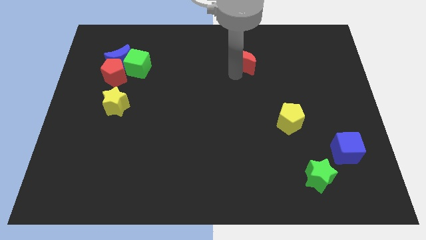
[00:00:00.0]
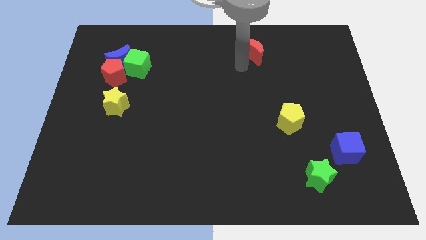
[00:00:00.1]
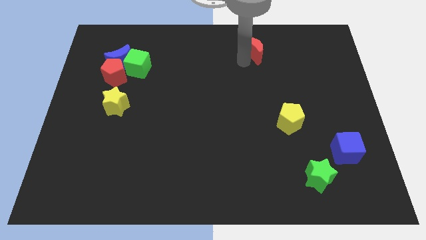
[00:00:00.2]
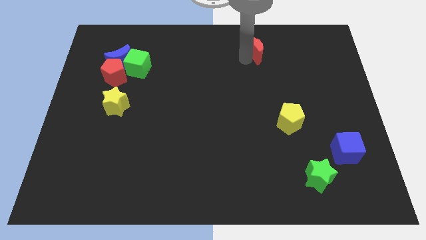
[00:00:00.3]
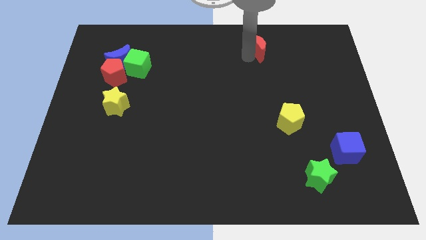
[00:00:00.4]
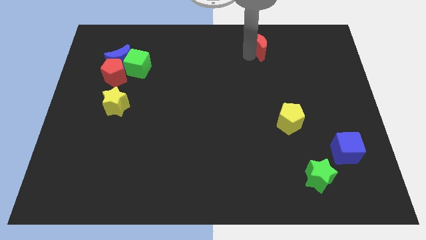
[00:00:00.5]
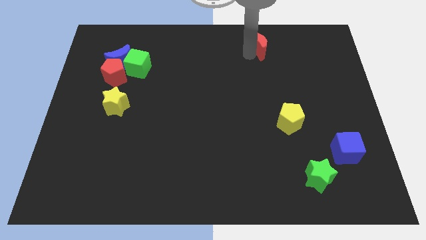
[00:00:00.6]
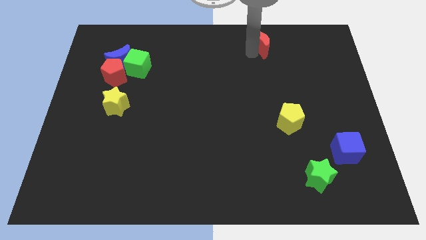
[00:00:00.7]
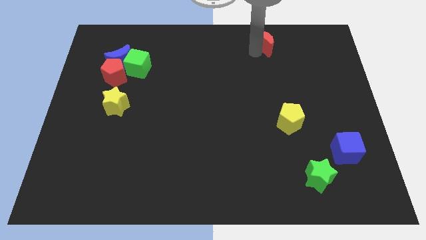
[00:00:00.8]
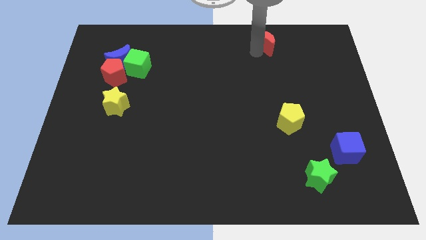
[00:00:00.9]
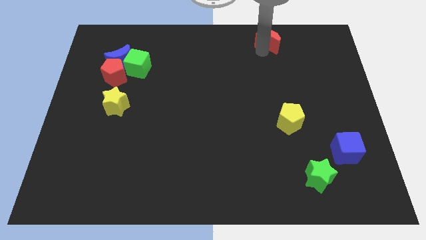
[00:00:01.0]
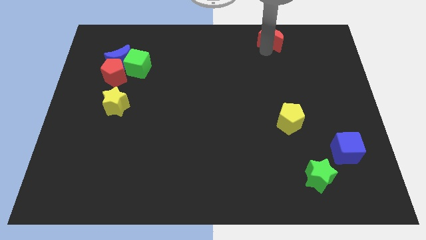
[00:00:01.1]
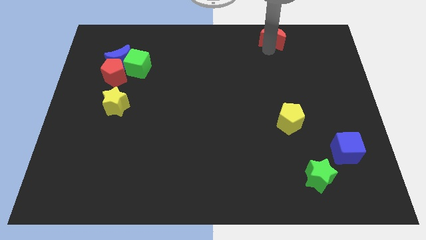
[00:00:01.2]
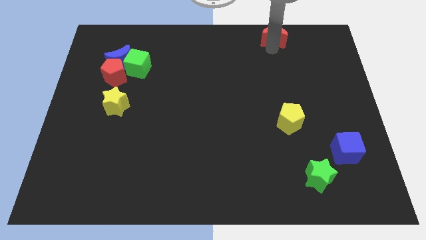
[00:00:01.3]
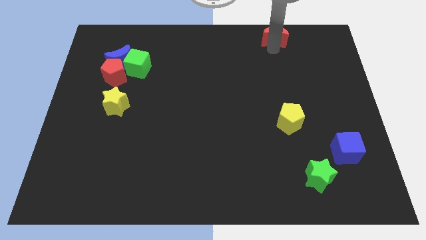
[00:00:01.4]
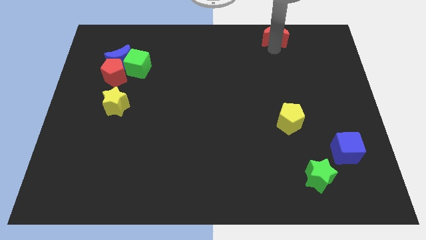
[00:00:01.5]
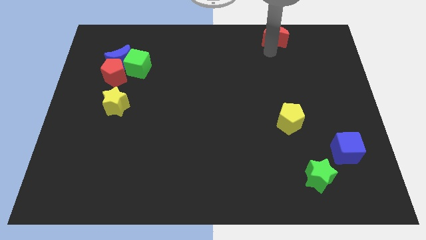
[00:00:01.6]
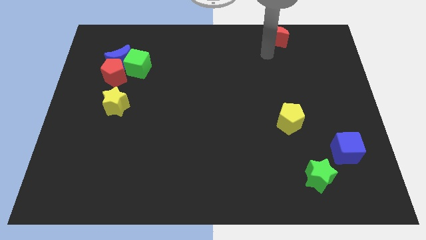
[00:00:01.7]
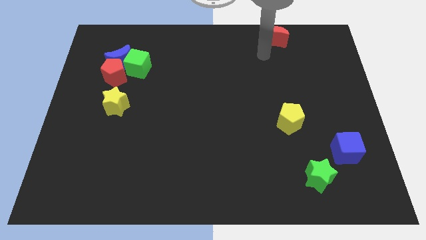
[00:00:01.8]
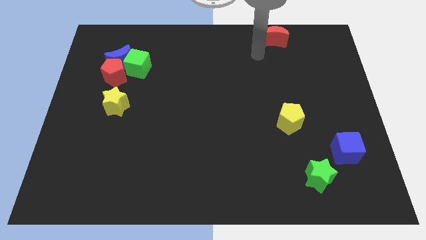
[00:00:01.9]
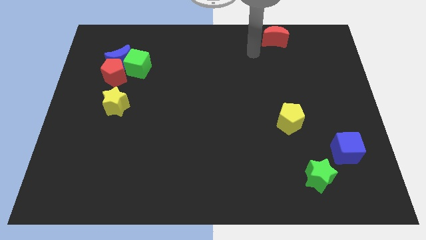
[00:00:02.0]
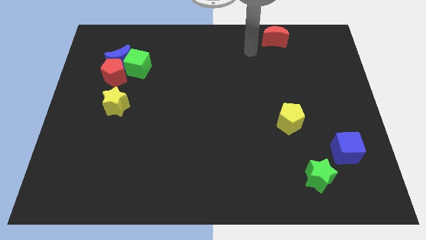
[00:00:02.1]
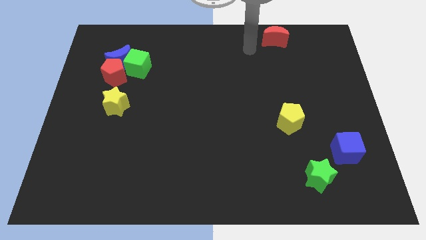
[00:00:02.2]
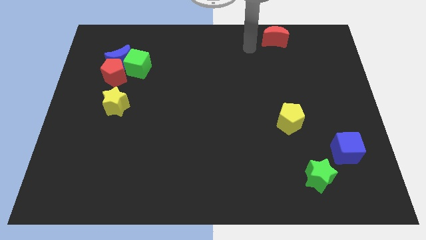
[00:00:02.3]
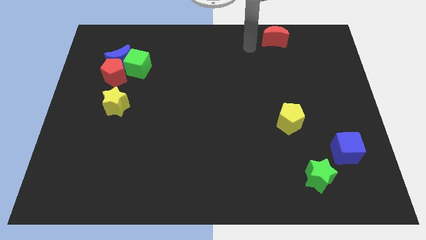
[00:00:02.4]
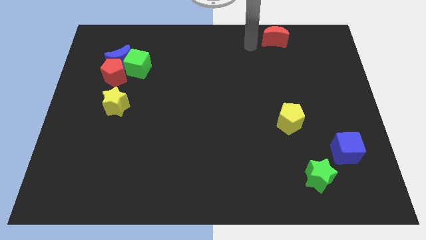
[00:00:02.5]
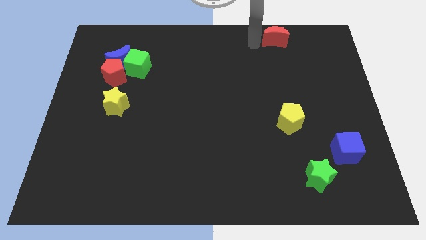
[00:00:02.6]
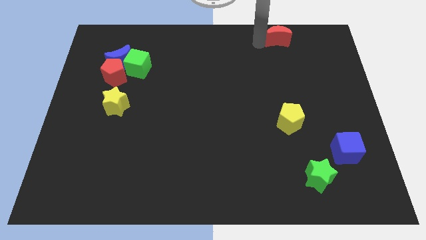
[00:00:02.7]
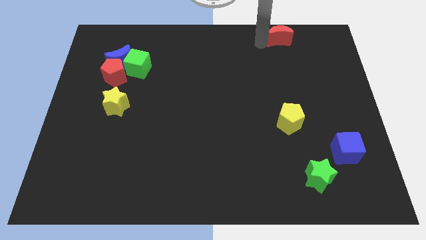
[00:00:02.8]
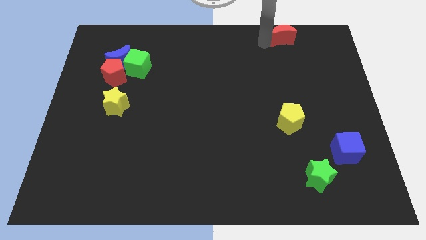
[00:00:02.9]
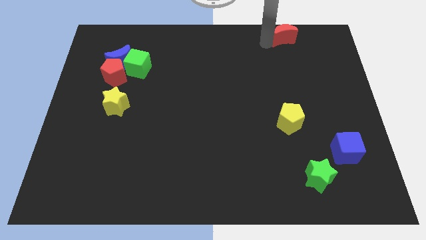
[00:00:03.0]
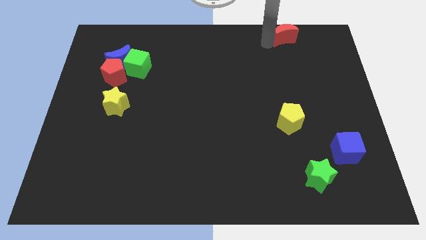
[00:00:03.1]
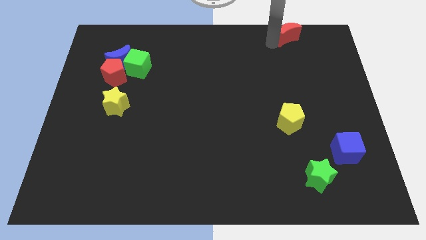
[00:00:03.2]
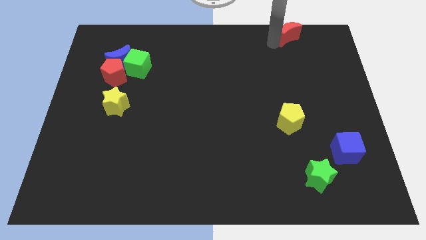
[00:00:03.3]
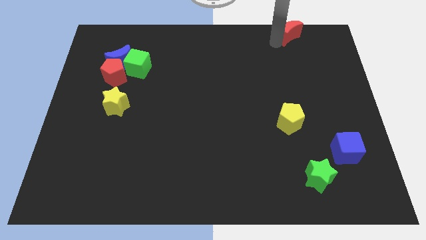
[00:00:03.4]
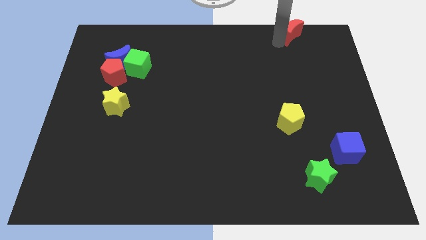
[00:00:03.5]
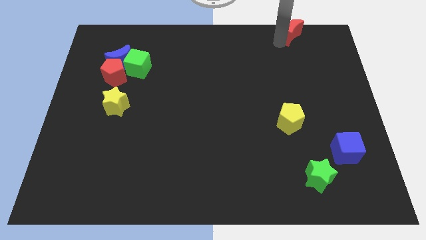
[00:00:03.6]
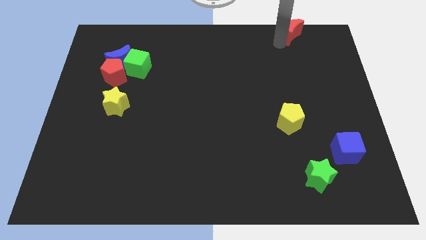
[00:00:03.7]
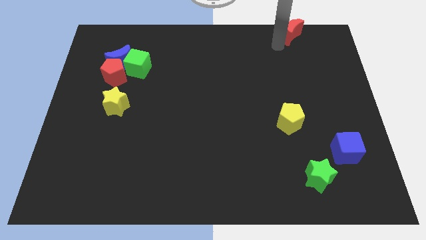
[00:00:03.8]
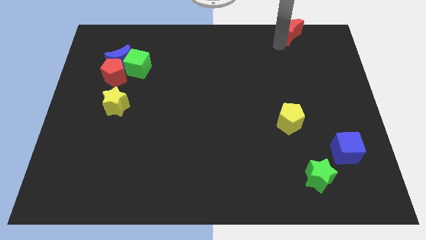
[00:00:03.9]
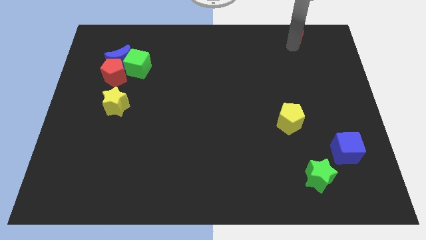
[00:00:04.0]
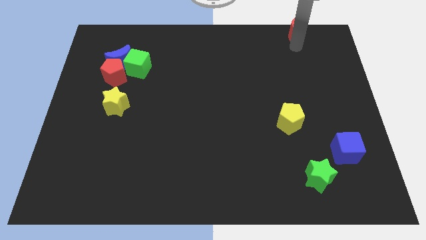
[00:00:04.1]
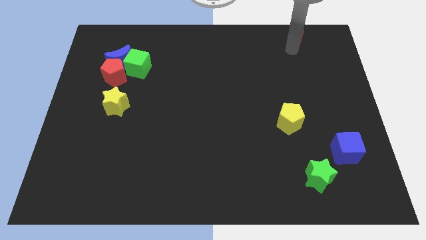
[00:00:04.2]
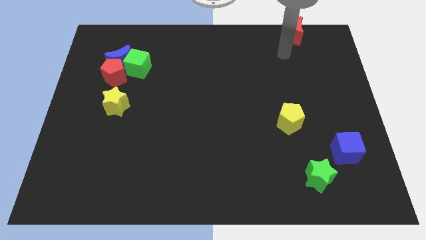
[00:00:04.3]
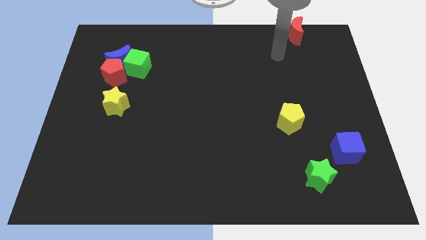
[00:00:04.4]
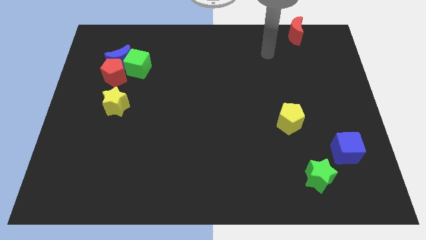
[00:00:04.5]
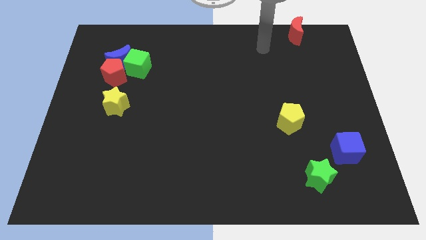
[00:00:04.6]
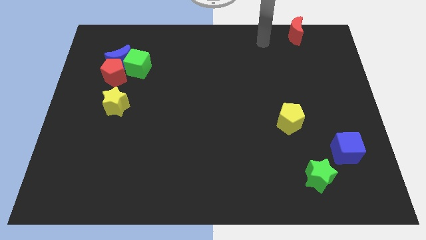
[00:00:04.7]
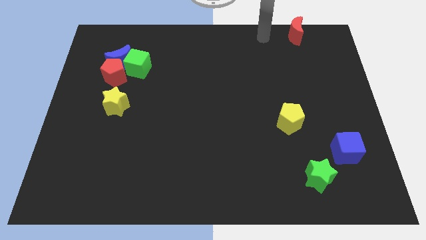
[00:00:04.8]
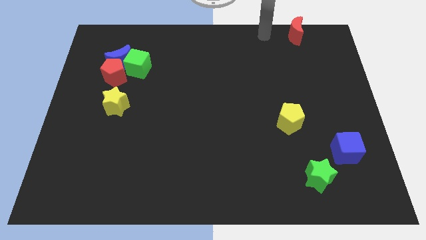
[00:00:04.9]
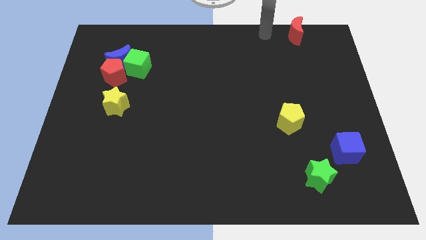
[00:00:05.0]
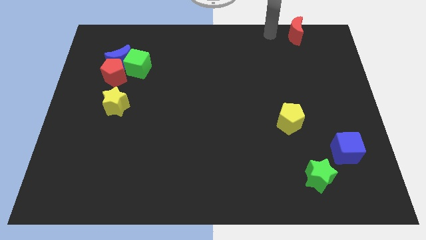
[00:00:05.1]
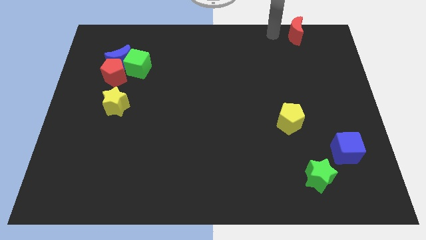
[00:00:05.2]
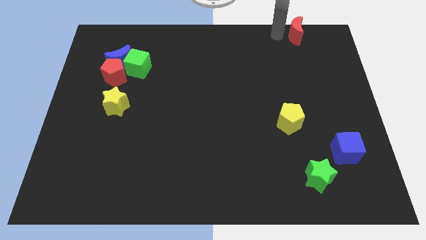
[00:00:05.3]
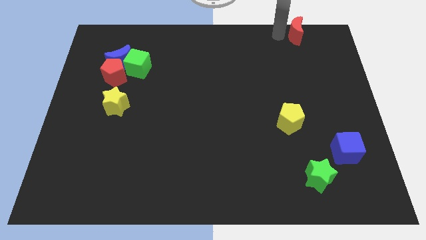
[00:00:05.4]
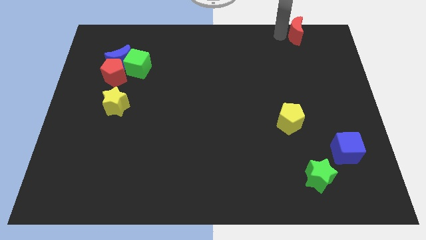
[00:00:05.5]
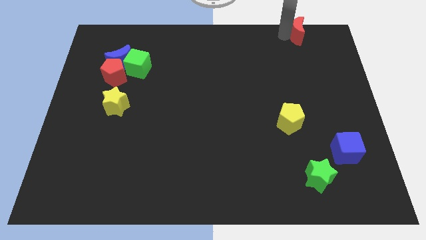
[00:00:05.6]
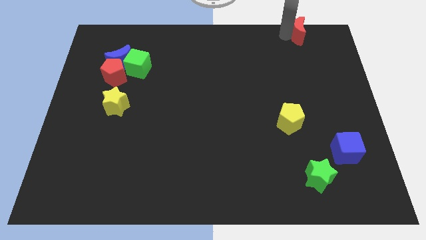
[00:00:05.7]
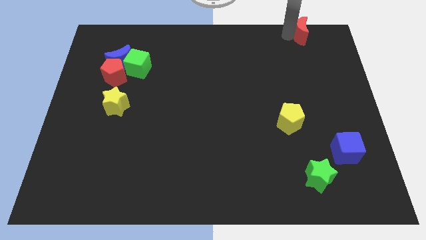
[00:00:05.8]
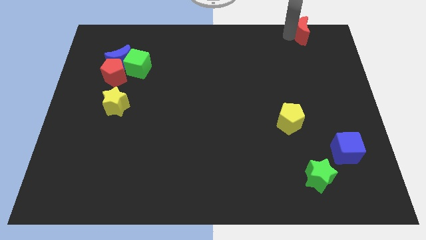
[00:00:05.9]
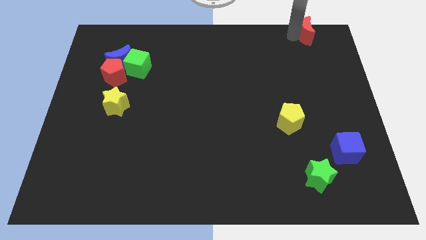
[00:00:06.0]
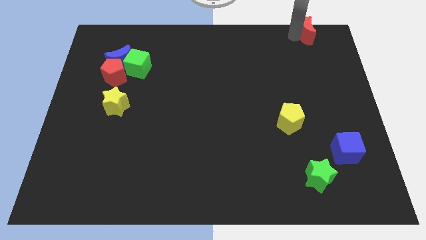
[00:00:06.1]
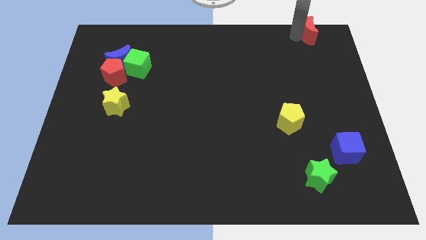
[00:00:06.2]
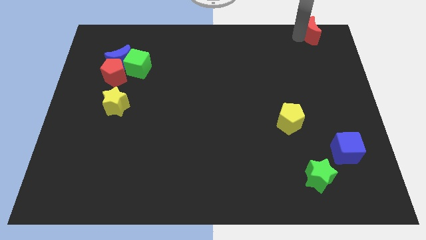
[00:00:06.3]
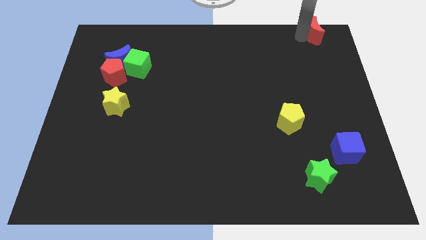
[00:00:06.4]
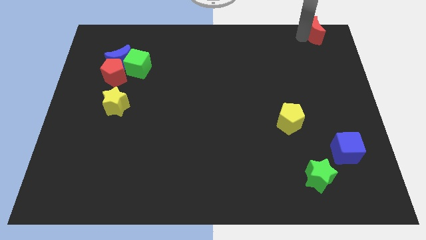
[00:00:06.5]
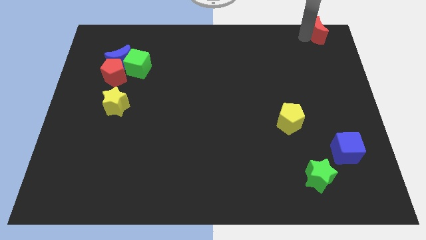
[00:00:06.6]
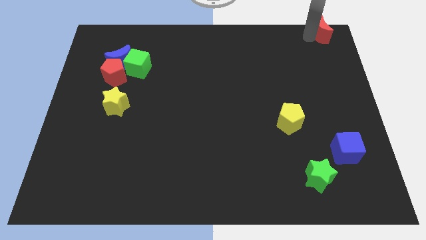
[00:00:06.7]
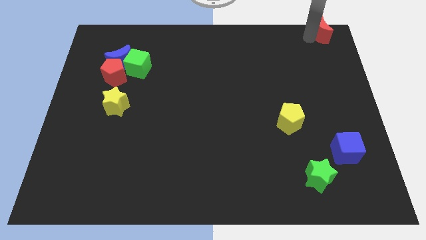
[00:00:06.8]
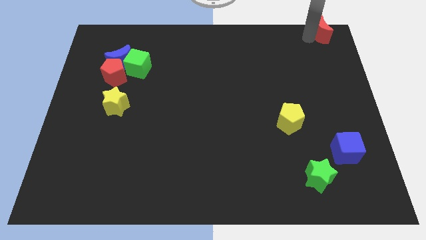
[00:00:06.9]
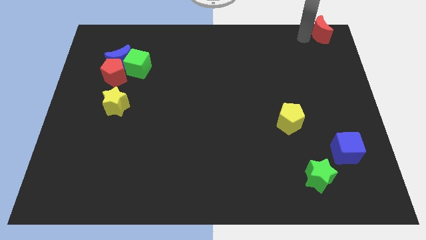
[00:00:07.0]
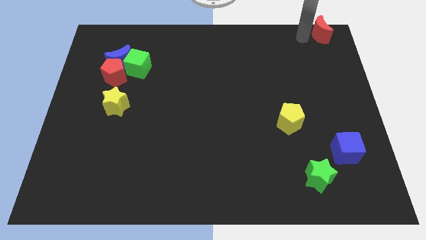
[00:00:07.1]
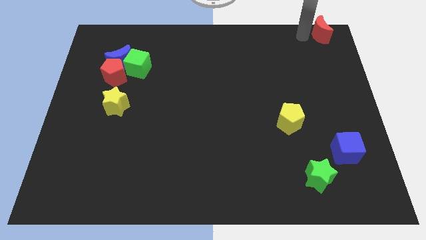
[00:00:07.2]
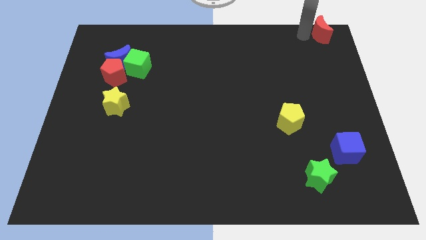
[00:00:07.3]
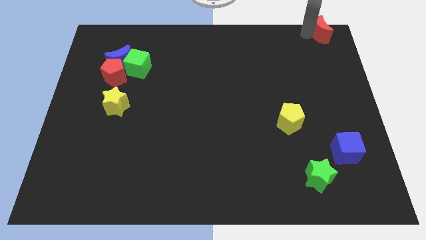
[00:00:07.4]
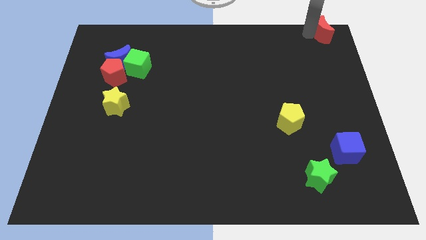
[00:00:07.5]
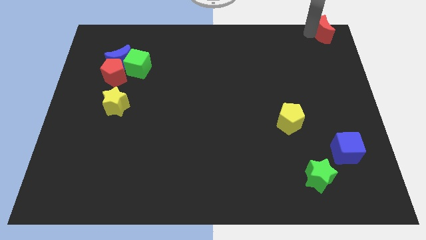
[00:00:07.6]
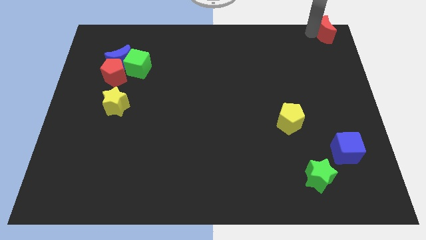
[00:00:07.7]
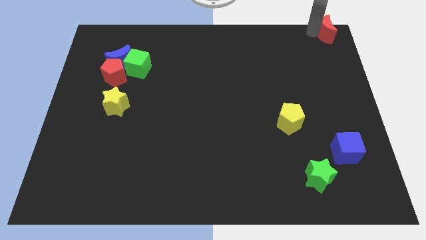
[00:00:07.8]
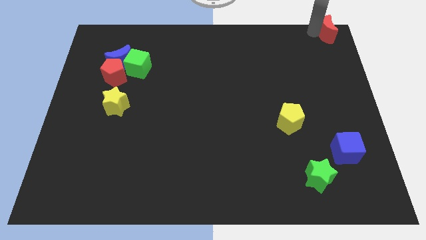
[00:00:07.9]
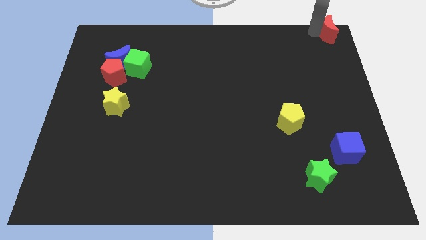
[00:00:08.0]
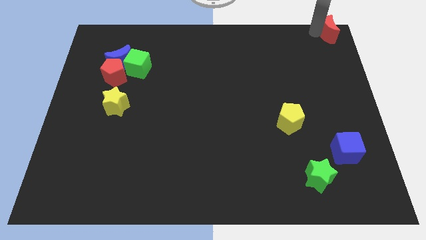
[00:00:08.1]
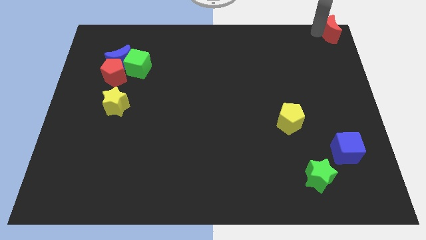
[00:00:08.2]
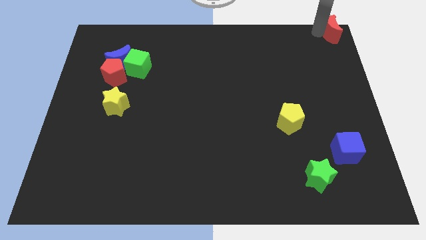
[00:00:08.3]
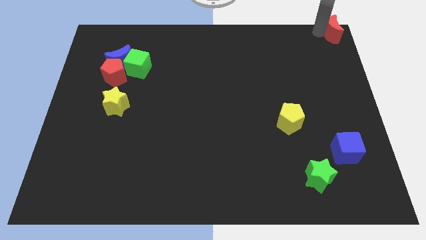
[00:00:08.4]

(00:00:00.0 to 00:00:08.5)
move the red moon to the top right side corner

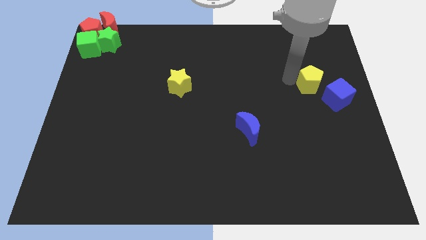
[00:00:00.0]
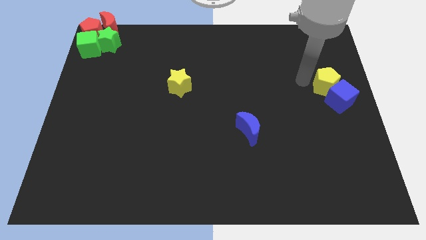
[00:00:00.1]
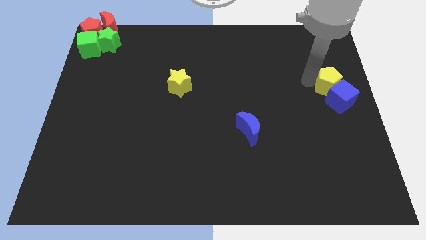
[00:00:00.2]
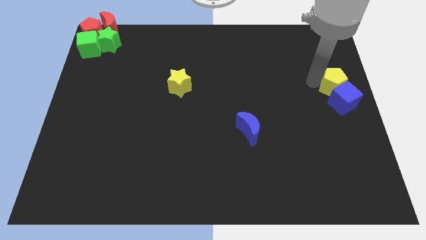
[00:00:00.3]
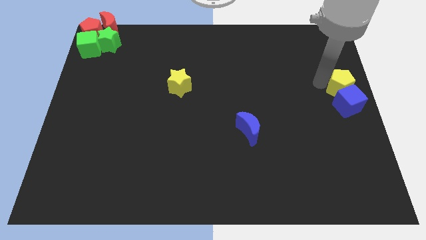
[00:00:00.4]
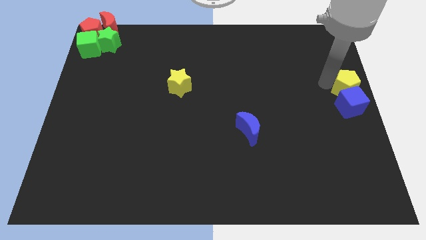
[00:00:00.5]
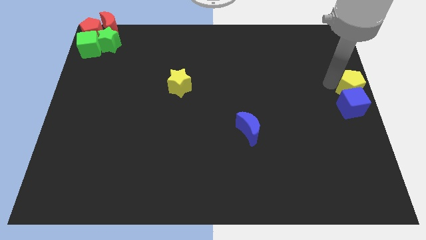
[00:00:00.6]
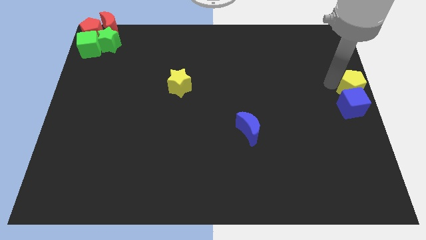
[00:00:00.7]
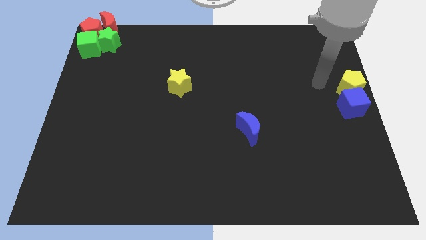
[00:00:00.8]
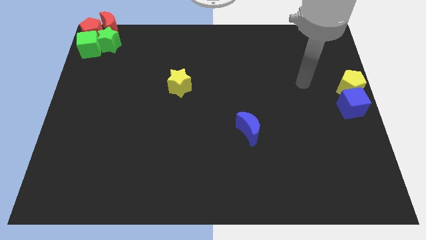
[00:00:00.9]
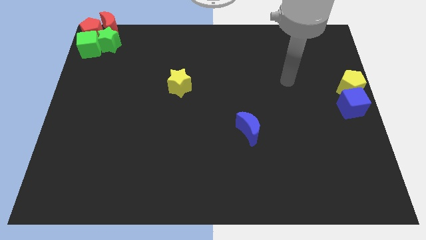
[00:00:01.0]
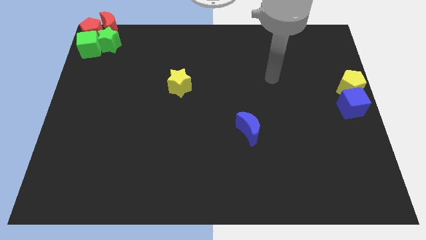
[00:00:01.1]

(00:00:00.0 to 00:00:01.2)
push the yellow pentagon into the blue cube
